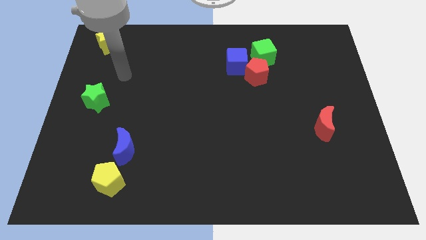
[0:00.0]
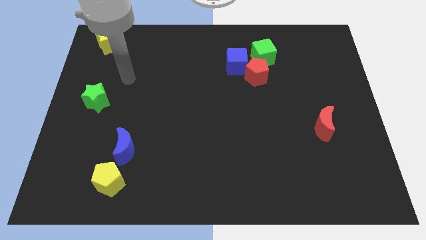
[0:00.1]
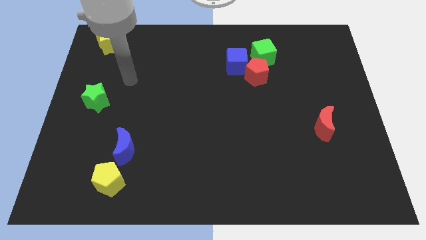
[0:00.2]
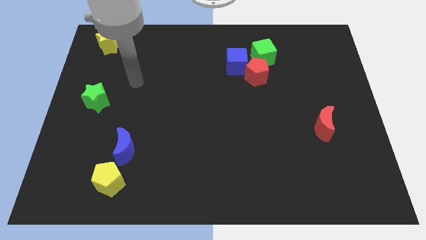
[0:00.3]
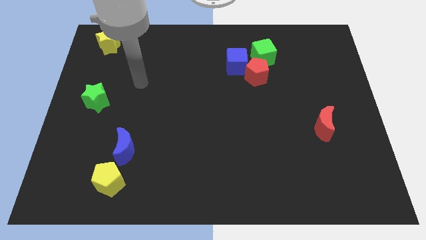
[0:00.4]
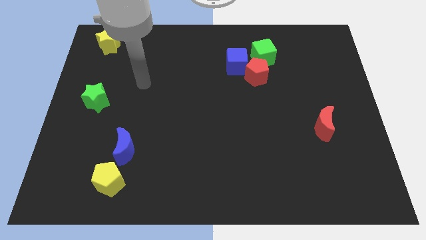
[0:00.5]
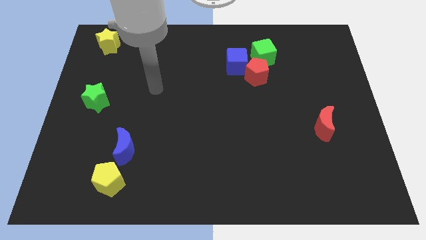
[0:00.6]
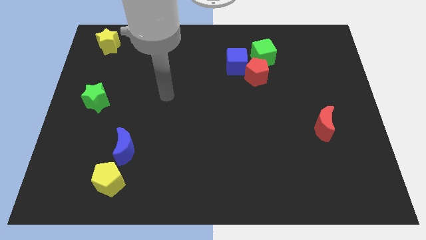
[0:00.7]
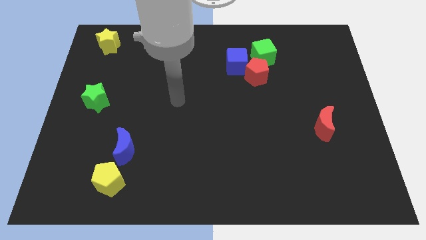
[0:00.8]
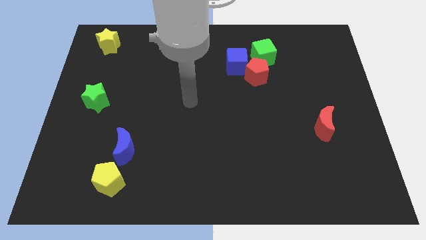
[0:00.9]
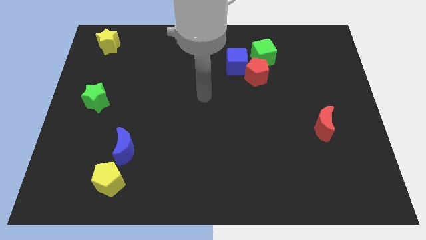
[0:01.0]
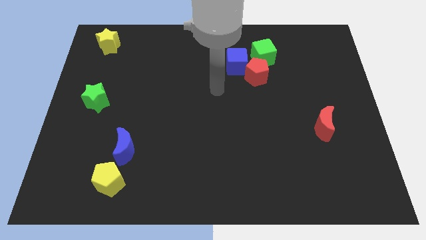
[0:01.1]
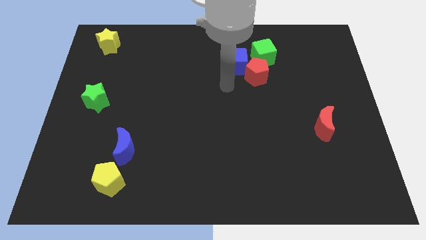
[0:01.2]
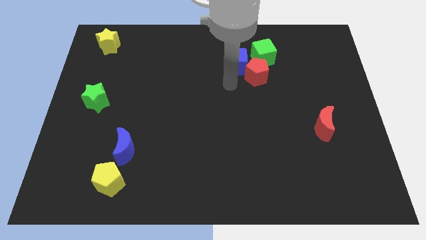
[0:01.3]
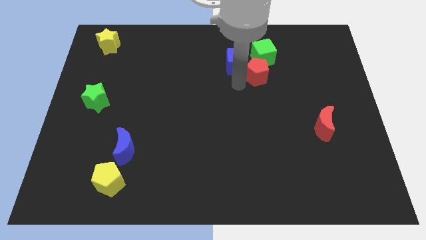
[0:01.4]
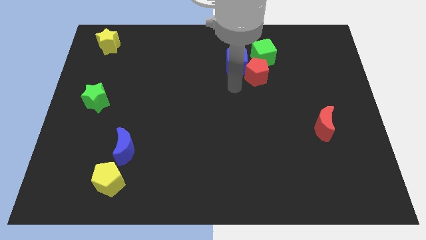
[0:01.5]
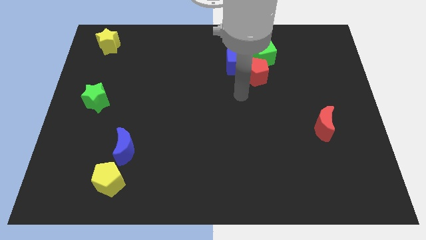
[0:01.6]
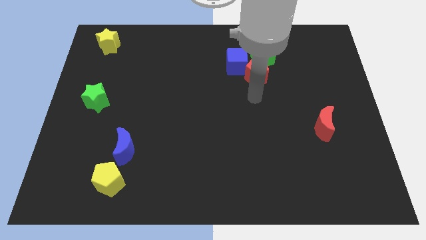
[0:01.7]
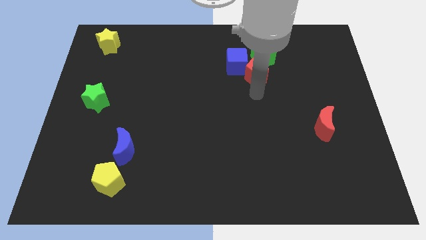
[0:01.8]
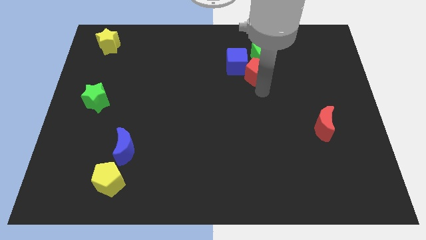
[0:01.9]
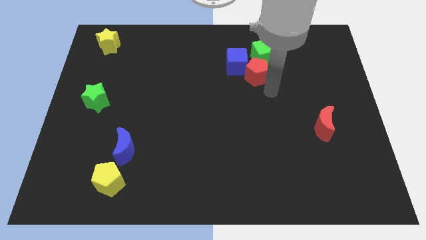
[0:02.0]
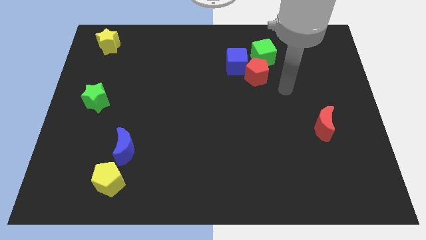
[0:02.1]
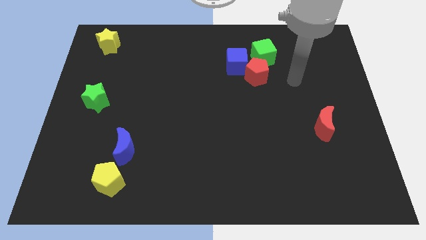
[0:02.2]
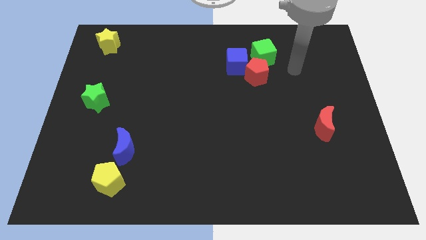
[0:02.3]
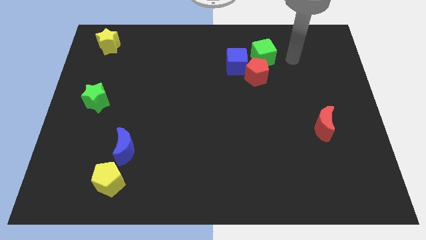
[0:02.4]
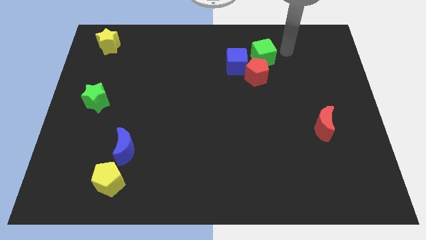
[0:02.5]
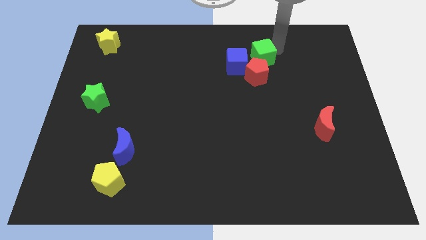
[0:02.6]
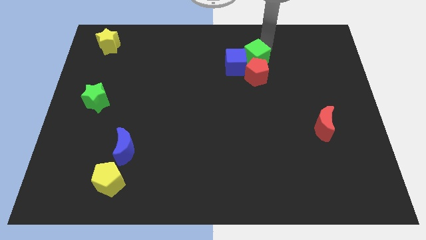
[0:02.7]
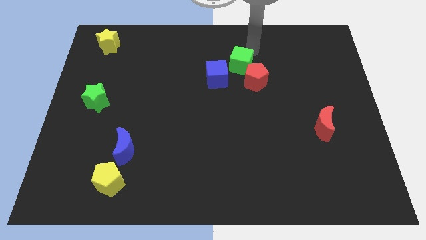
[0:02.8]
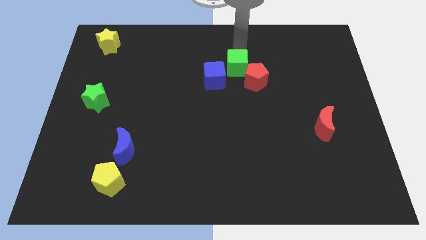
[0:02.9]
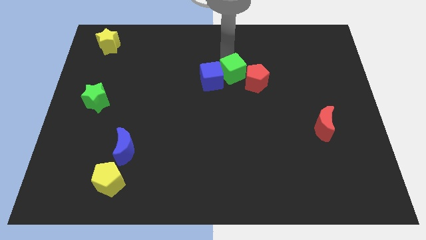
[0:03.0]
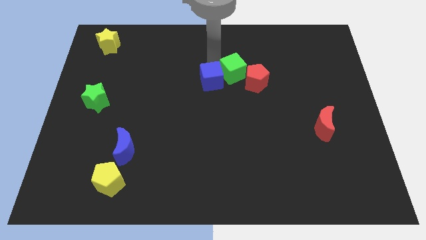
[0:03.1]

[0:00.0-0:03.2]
push the green cube into the group of blocks

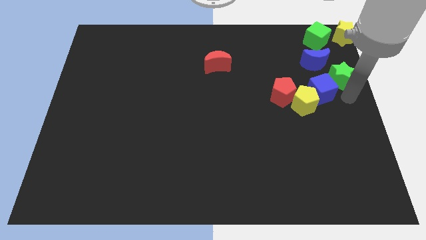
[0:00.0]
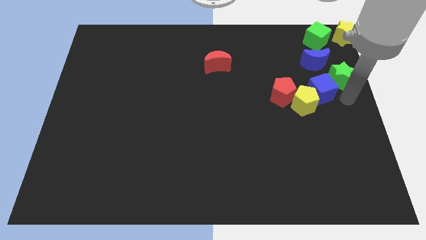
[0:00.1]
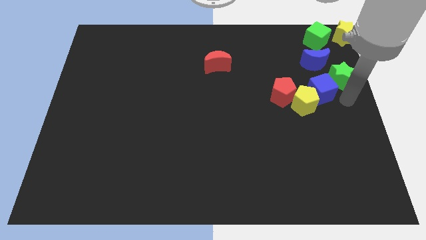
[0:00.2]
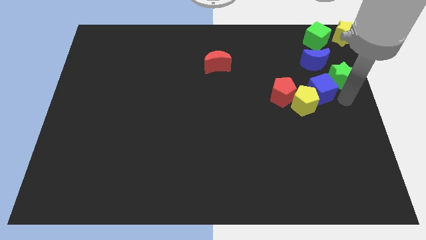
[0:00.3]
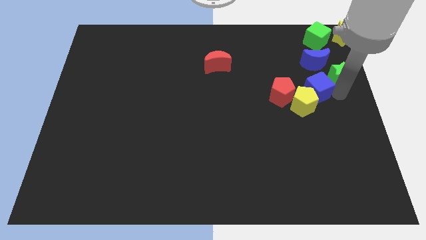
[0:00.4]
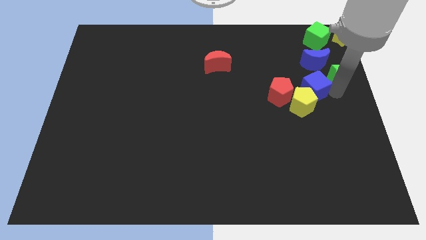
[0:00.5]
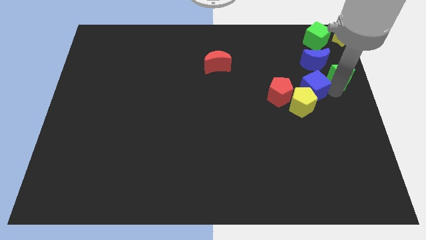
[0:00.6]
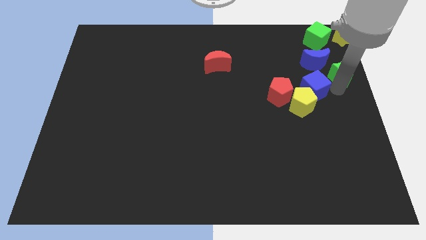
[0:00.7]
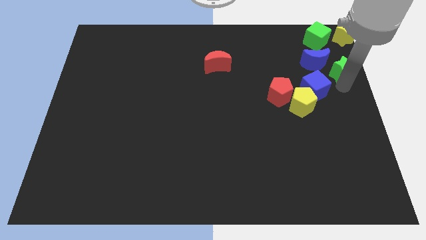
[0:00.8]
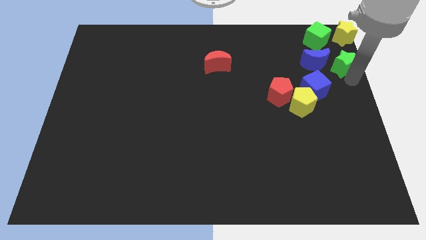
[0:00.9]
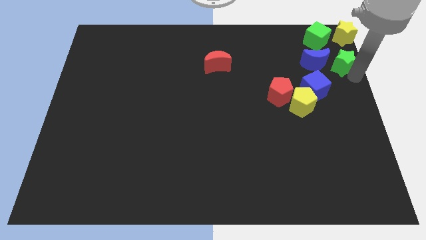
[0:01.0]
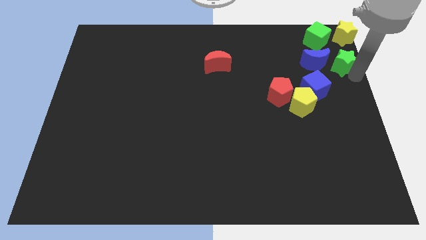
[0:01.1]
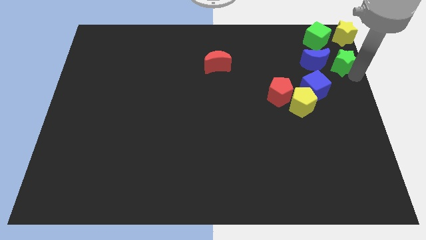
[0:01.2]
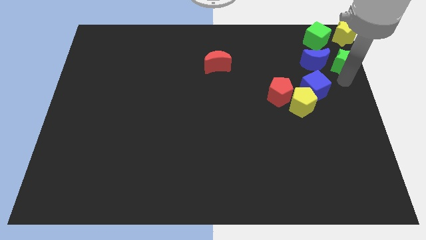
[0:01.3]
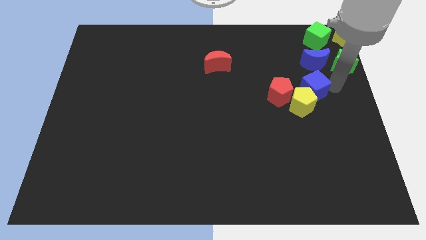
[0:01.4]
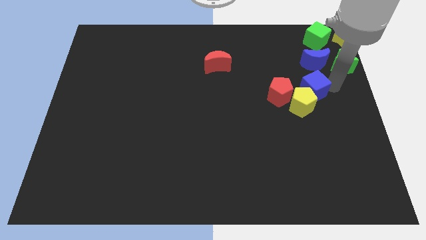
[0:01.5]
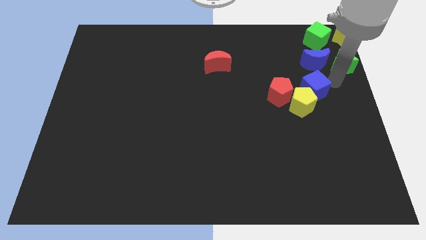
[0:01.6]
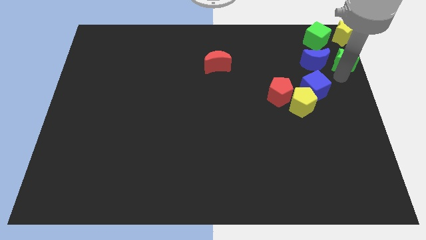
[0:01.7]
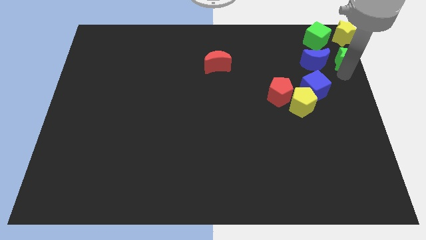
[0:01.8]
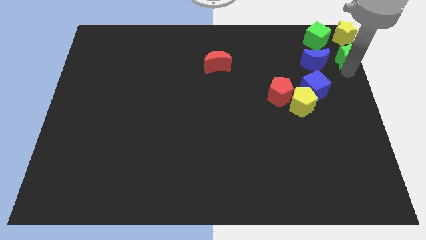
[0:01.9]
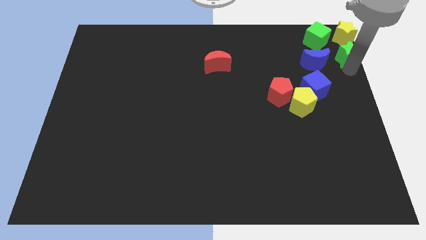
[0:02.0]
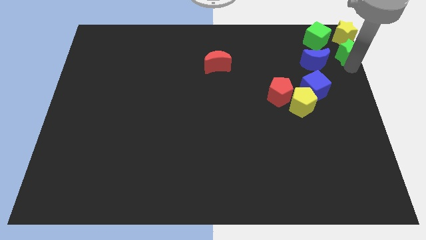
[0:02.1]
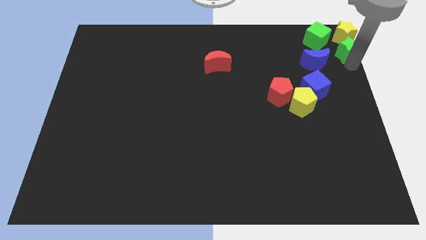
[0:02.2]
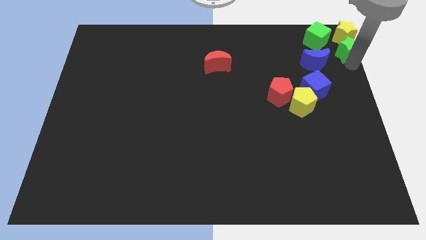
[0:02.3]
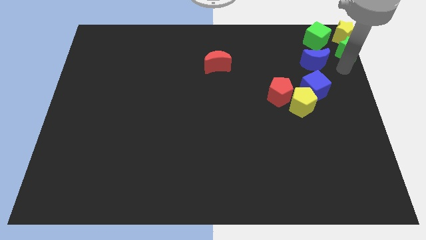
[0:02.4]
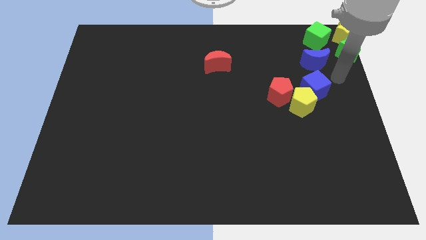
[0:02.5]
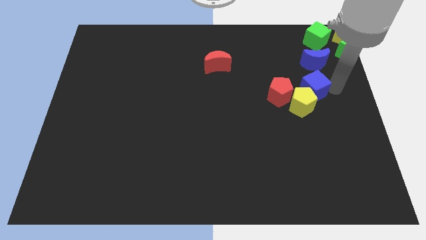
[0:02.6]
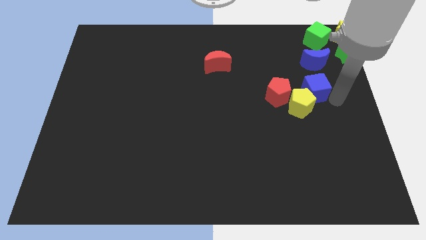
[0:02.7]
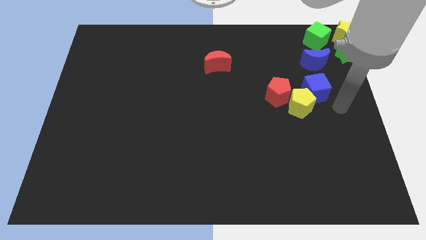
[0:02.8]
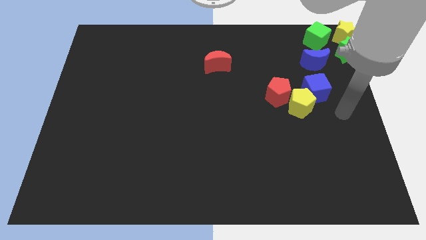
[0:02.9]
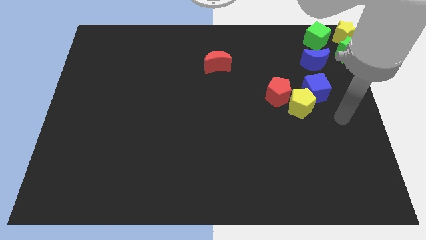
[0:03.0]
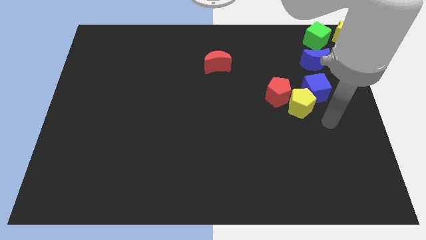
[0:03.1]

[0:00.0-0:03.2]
move green star towards the yellow star

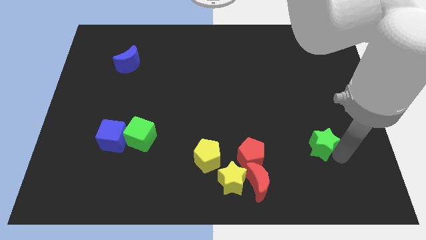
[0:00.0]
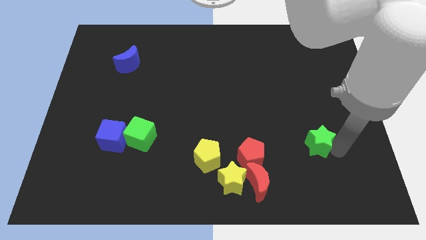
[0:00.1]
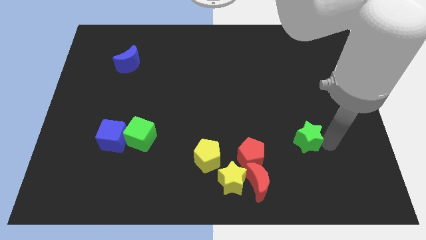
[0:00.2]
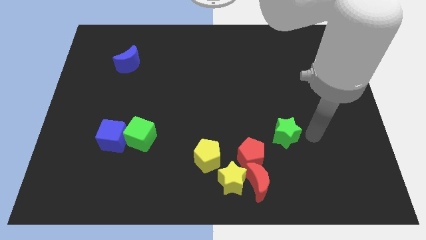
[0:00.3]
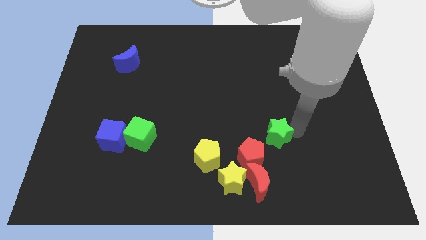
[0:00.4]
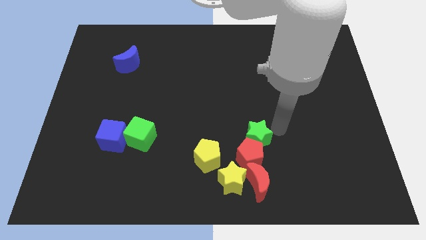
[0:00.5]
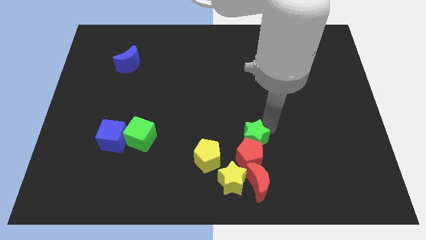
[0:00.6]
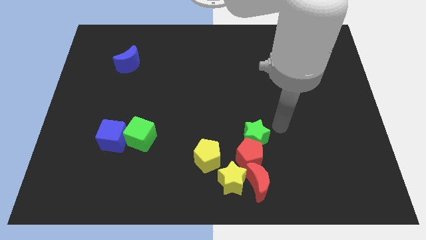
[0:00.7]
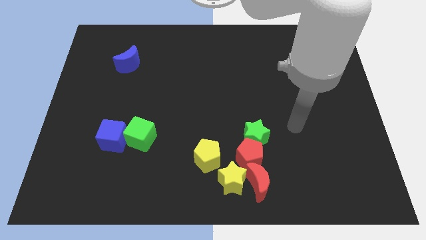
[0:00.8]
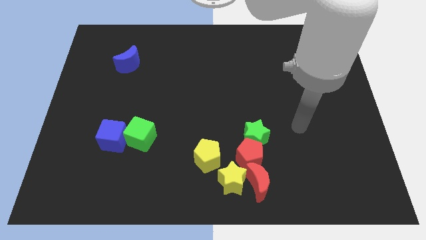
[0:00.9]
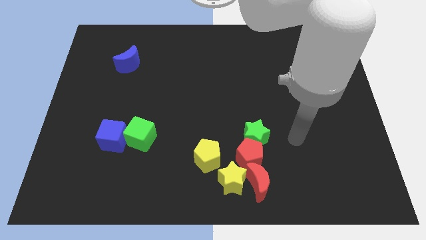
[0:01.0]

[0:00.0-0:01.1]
put green star above red pentagon

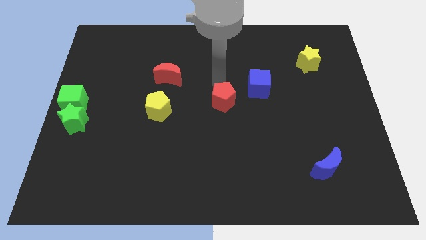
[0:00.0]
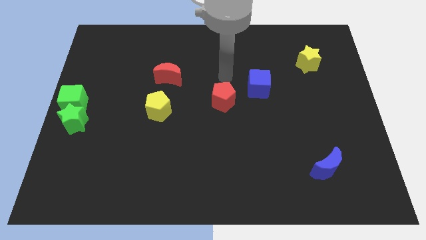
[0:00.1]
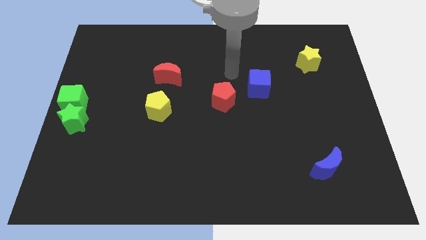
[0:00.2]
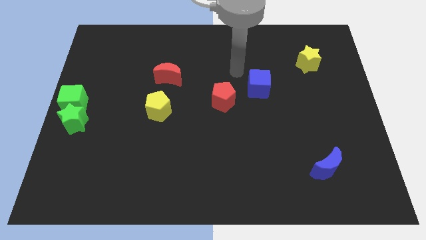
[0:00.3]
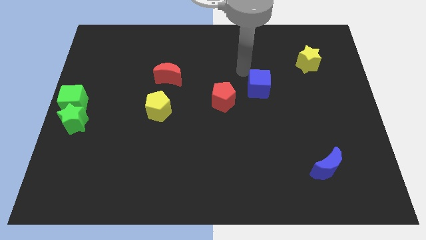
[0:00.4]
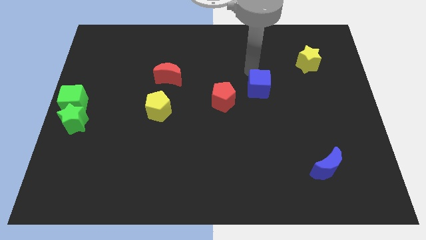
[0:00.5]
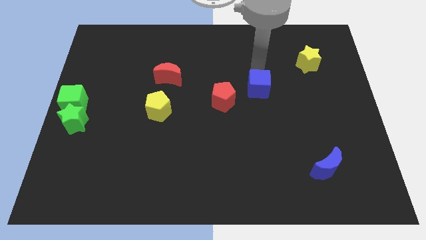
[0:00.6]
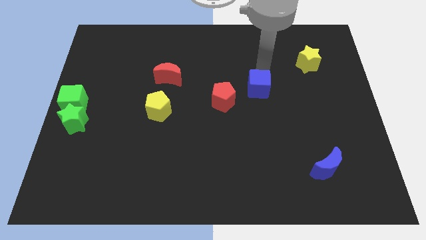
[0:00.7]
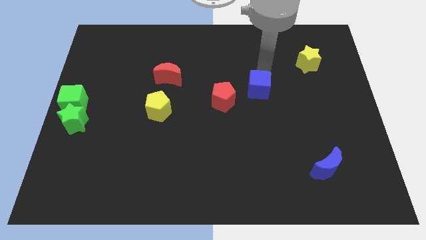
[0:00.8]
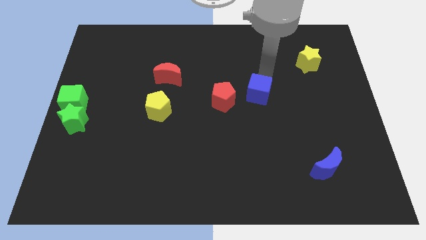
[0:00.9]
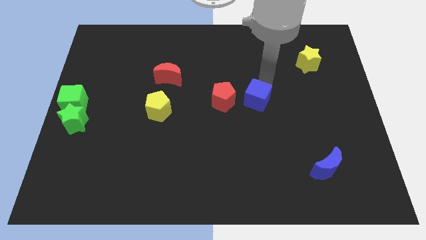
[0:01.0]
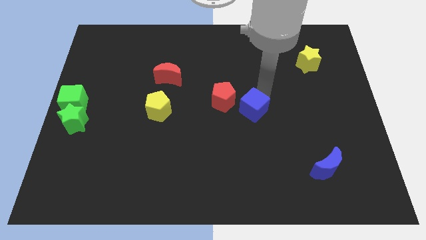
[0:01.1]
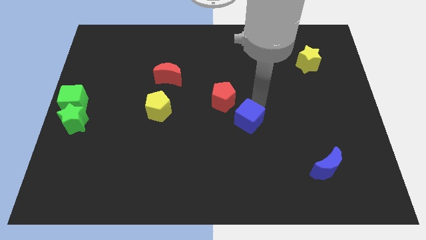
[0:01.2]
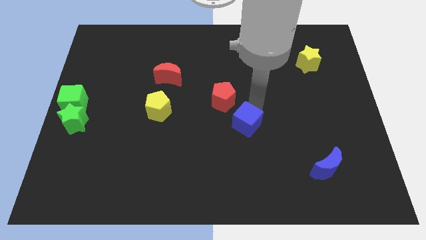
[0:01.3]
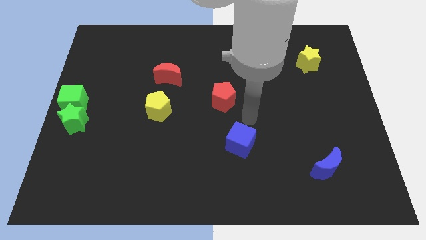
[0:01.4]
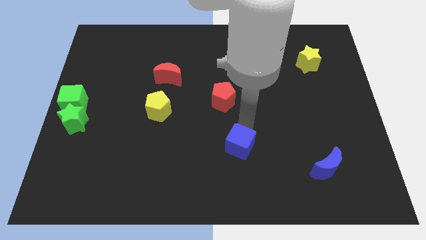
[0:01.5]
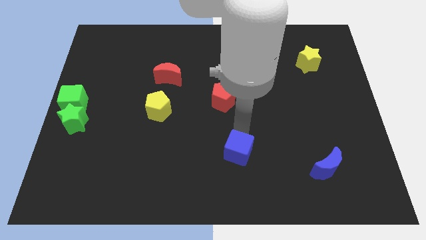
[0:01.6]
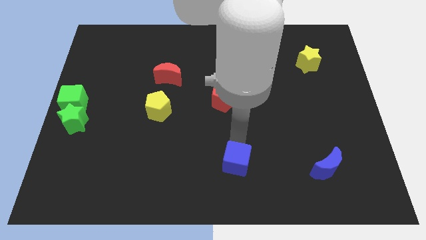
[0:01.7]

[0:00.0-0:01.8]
place the blue cube below the red pentagon
